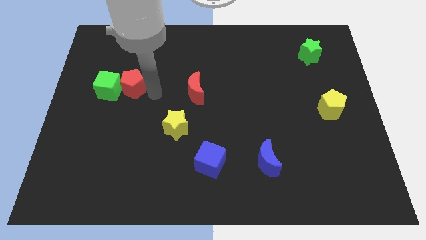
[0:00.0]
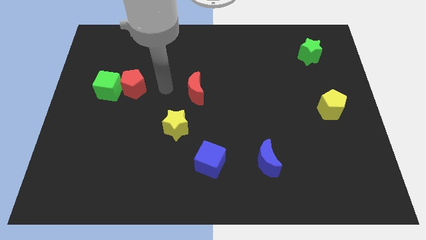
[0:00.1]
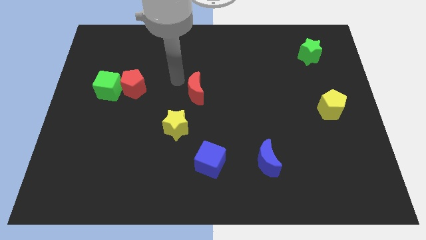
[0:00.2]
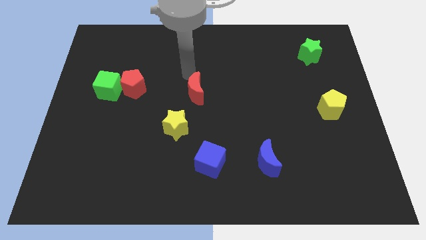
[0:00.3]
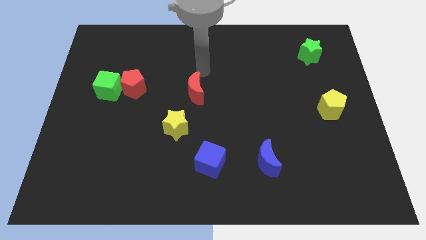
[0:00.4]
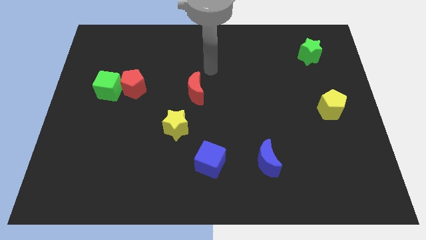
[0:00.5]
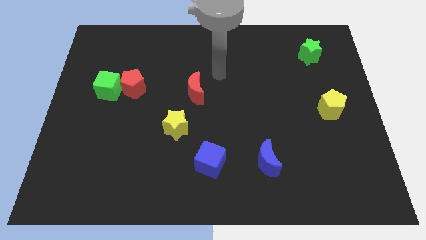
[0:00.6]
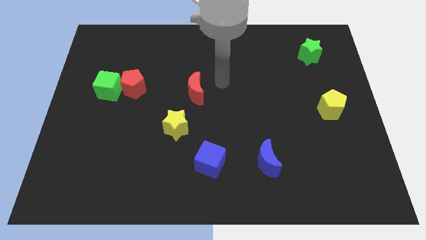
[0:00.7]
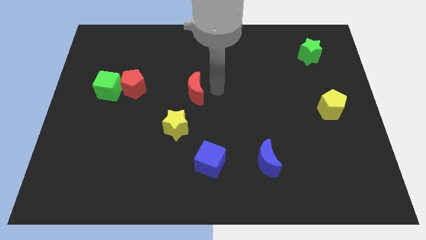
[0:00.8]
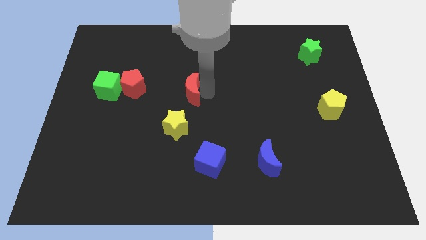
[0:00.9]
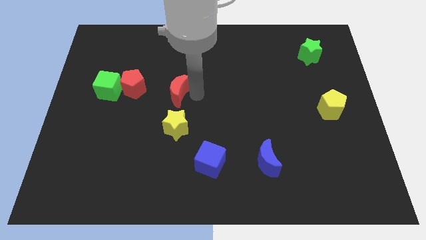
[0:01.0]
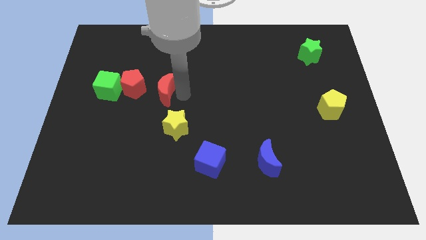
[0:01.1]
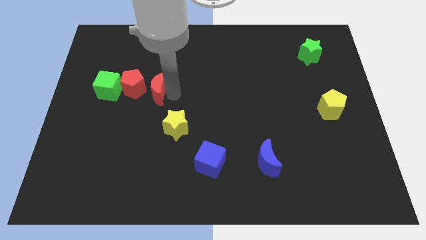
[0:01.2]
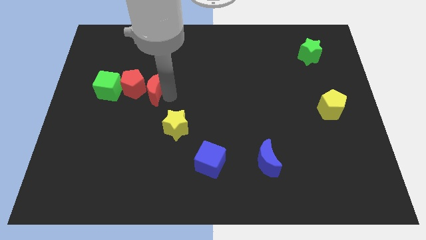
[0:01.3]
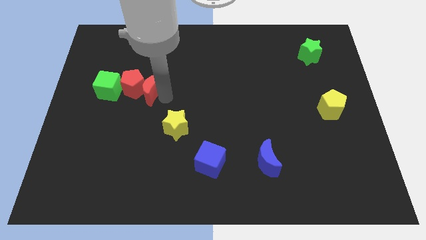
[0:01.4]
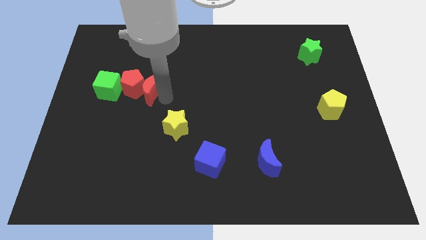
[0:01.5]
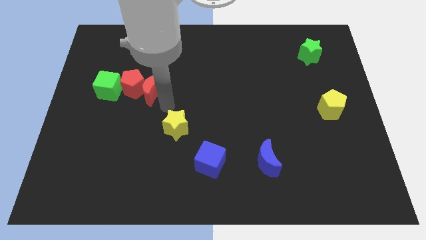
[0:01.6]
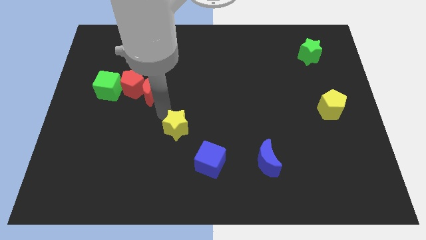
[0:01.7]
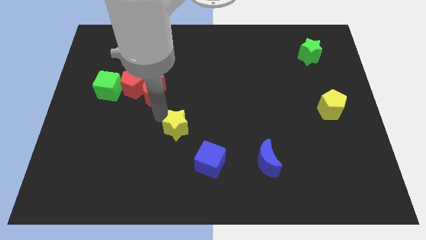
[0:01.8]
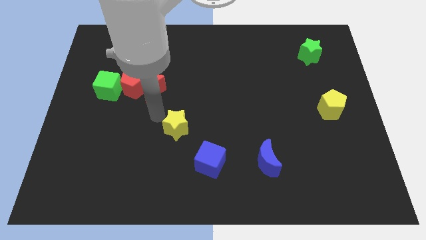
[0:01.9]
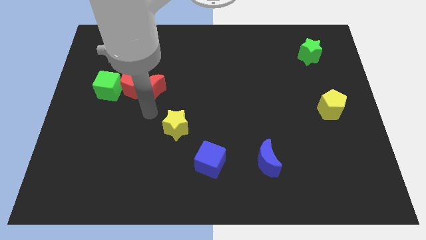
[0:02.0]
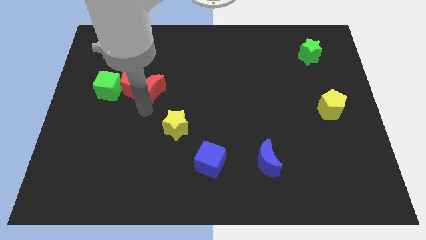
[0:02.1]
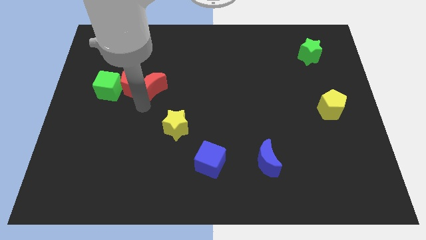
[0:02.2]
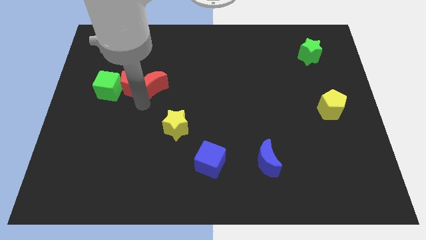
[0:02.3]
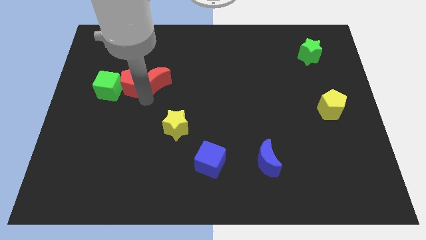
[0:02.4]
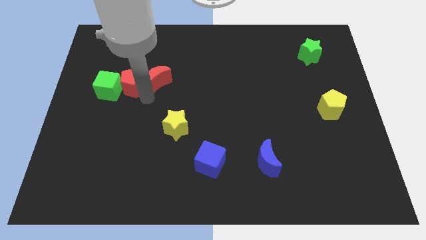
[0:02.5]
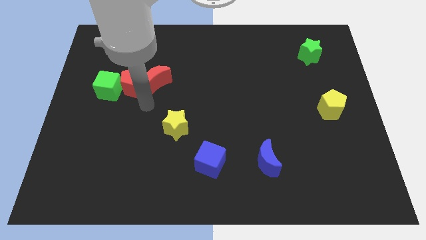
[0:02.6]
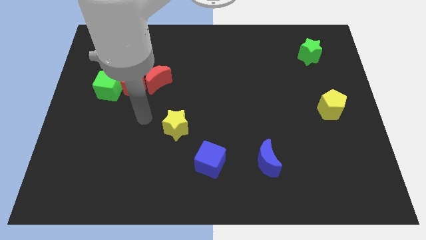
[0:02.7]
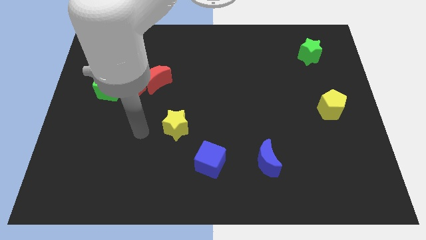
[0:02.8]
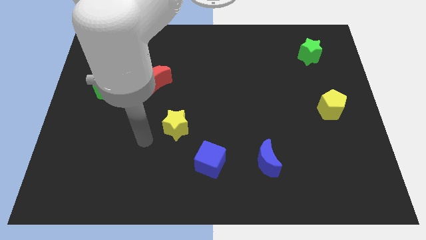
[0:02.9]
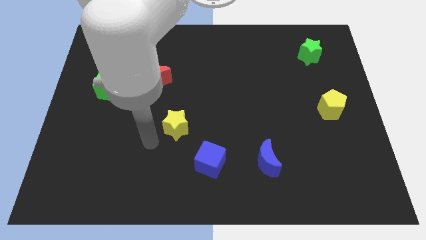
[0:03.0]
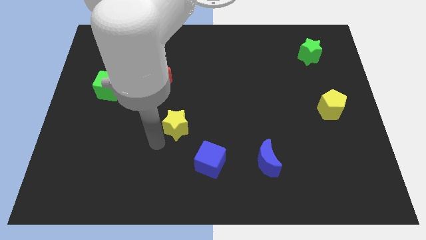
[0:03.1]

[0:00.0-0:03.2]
arrange the red crescent on the top right of the red pentagon

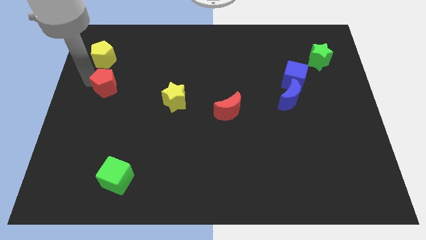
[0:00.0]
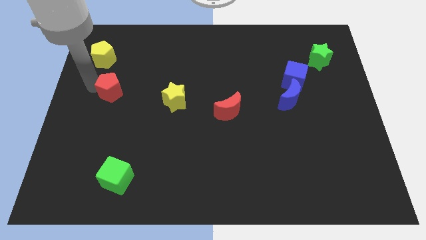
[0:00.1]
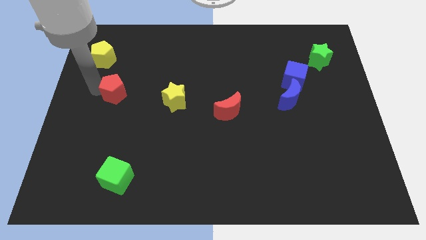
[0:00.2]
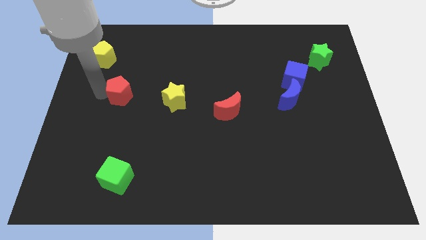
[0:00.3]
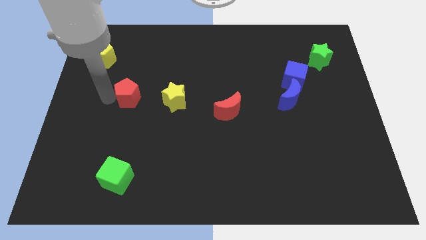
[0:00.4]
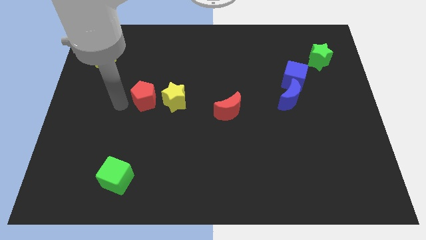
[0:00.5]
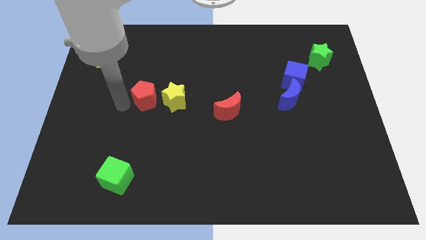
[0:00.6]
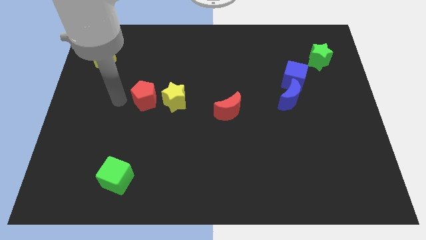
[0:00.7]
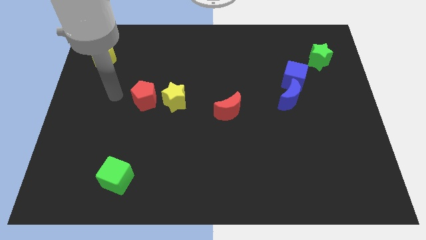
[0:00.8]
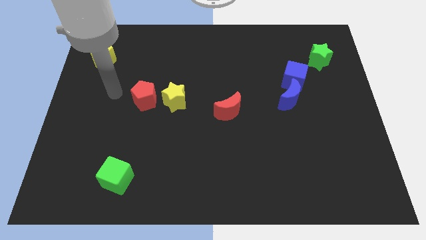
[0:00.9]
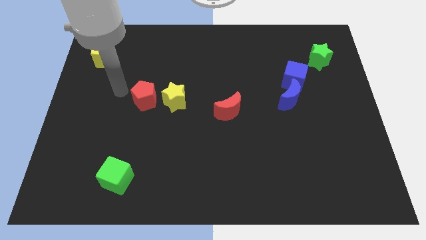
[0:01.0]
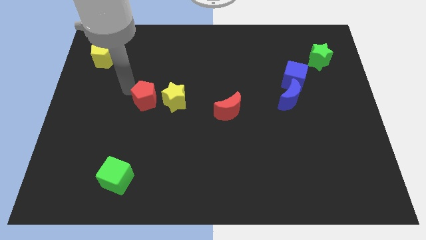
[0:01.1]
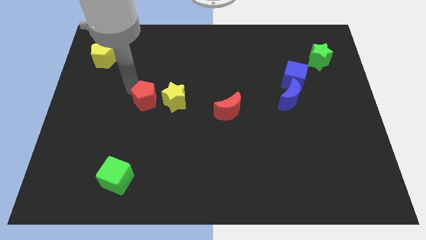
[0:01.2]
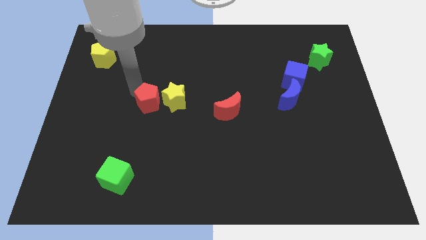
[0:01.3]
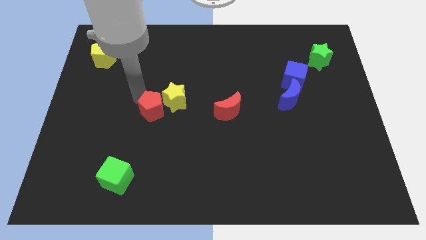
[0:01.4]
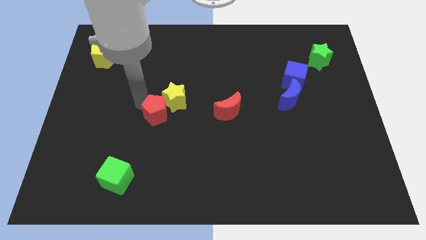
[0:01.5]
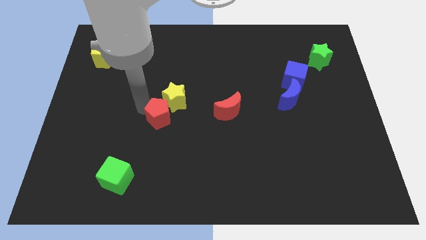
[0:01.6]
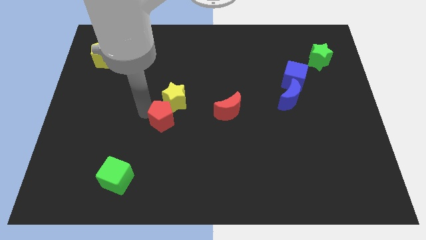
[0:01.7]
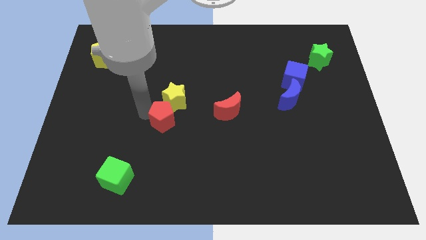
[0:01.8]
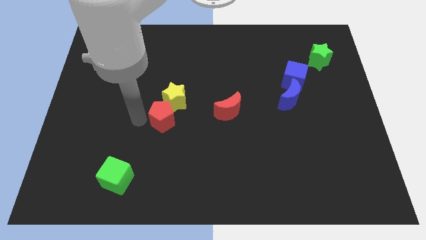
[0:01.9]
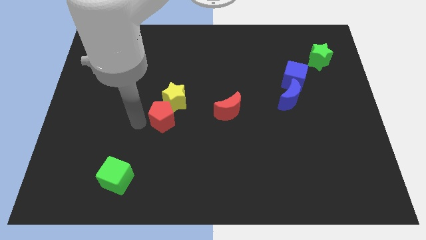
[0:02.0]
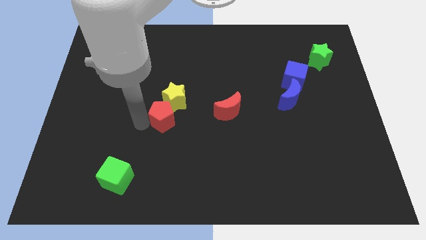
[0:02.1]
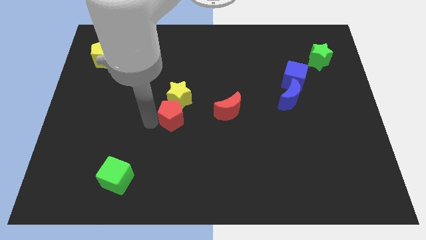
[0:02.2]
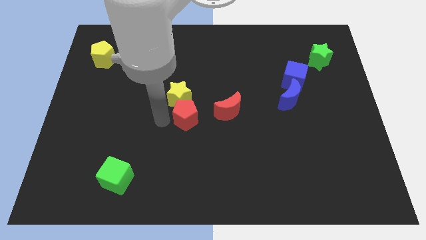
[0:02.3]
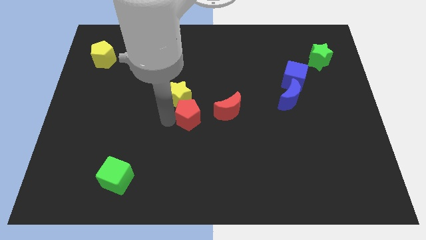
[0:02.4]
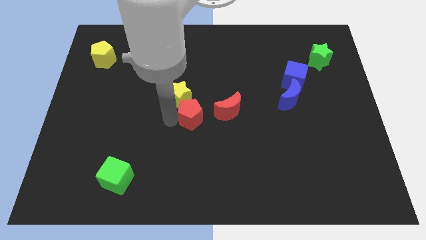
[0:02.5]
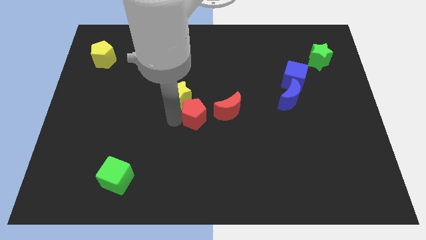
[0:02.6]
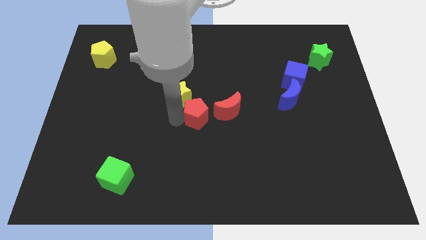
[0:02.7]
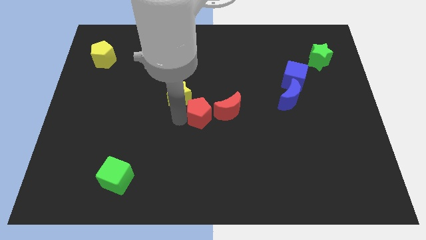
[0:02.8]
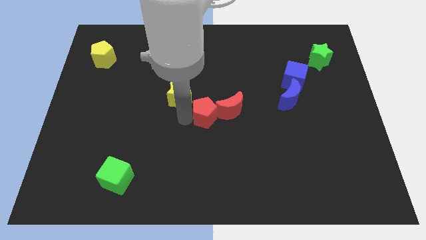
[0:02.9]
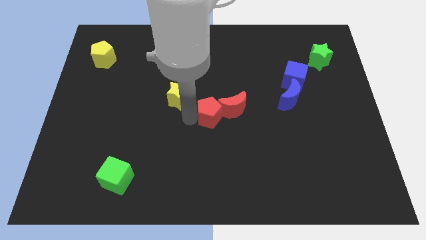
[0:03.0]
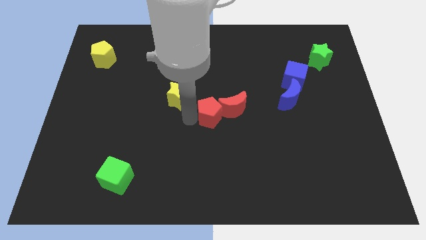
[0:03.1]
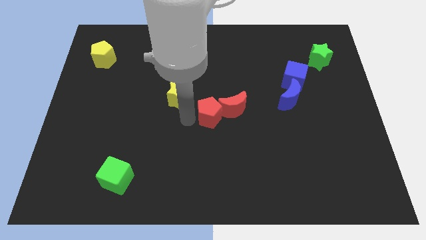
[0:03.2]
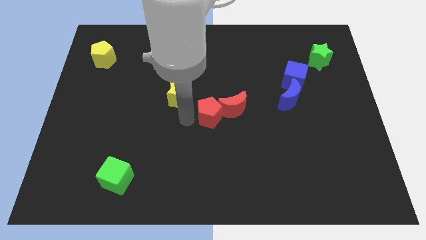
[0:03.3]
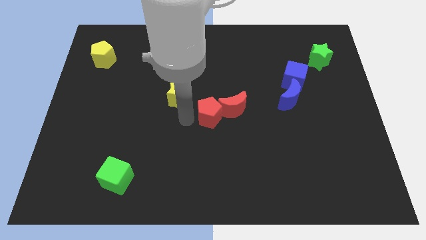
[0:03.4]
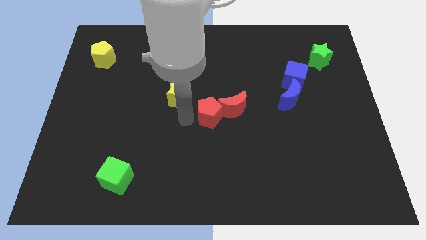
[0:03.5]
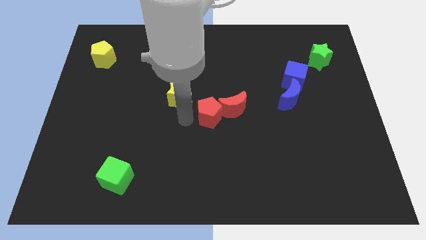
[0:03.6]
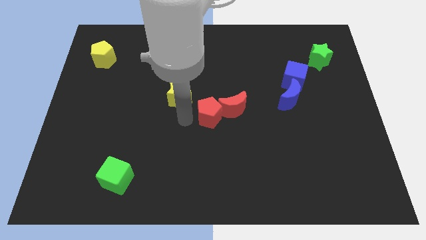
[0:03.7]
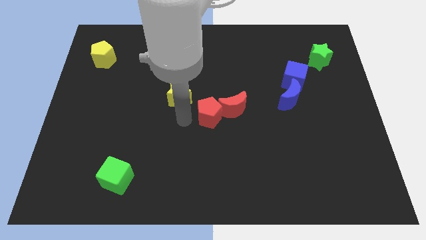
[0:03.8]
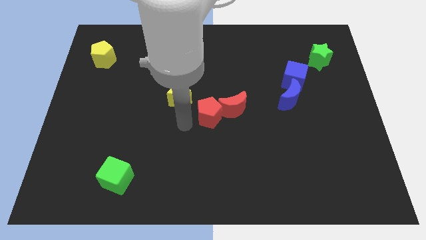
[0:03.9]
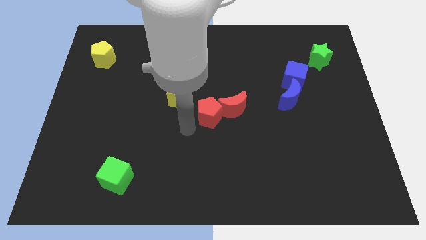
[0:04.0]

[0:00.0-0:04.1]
push the red pentagon into the red crescent

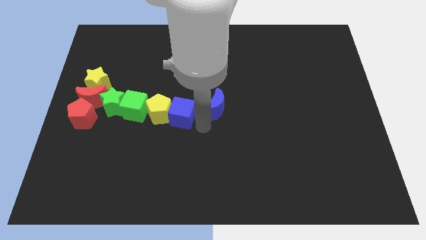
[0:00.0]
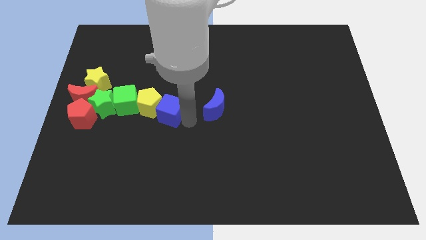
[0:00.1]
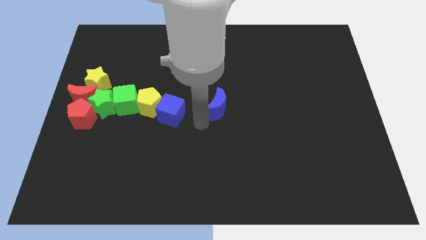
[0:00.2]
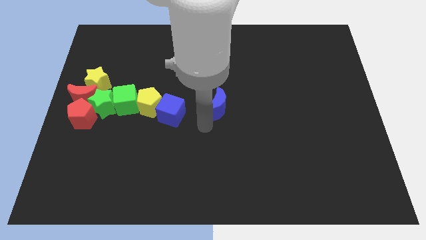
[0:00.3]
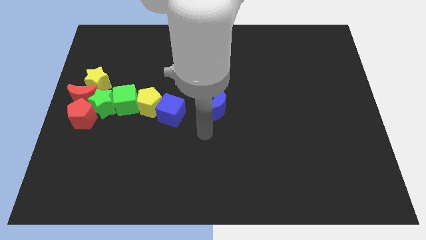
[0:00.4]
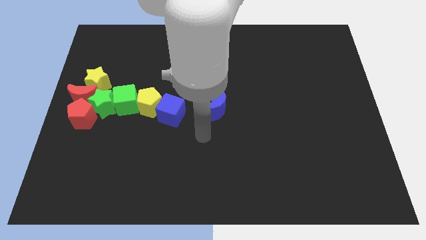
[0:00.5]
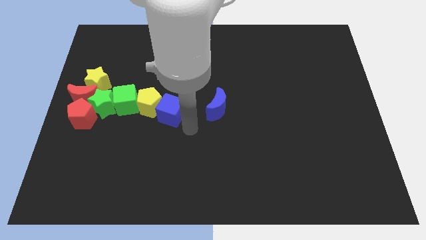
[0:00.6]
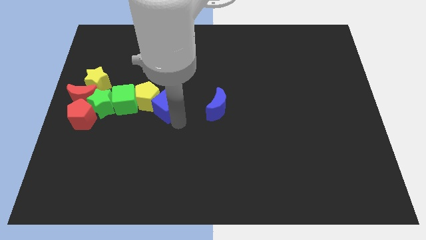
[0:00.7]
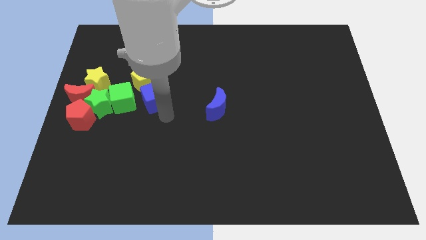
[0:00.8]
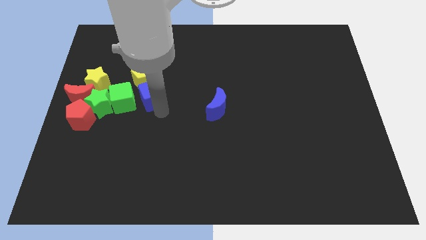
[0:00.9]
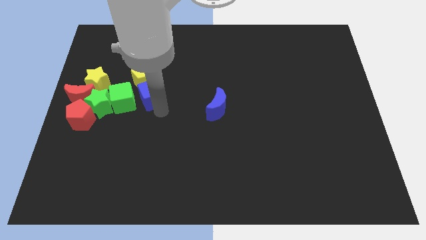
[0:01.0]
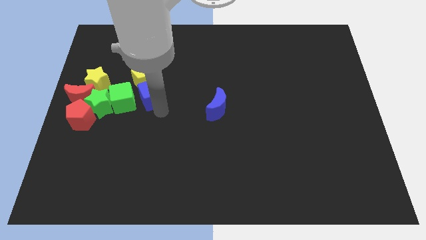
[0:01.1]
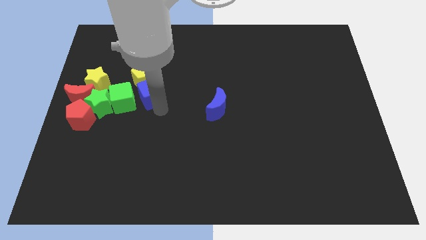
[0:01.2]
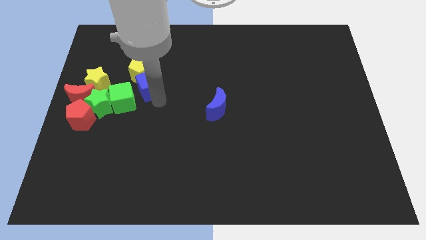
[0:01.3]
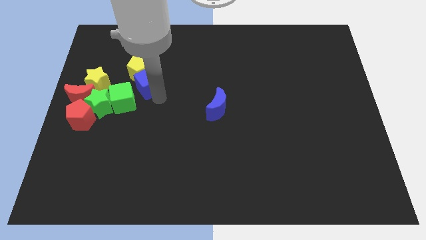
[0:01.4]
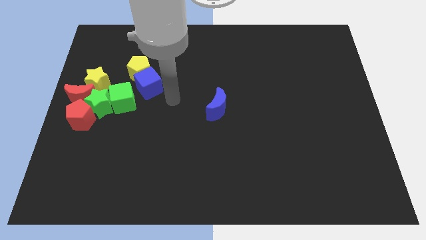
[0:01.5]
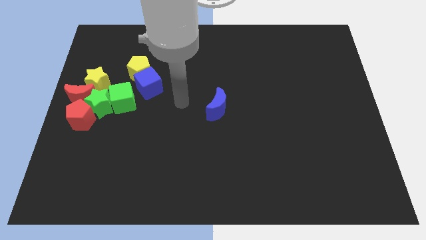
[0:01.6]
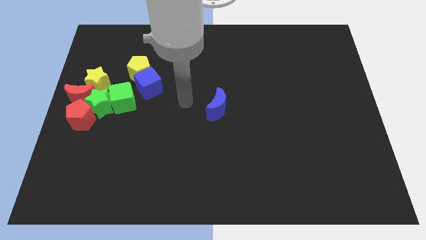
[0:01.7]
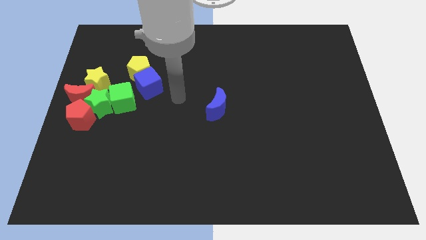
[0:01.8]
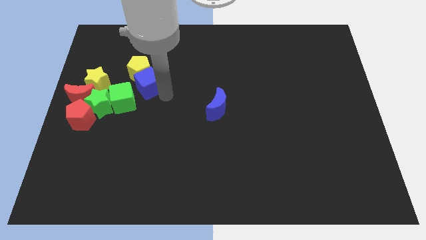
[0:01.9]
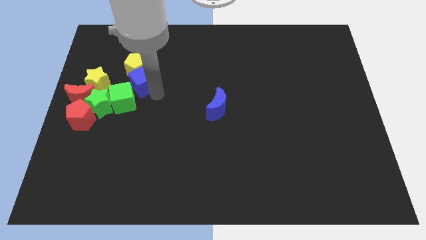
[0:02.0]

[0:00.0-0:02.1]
push the blue cube into the yellow pentagon
